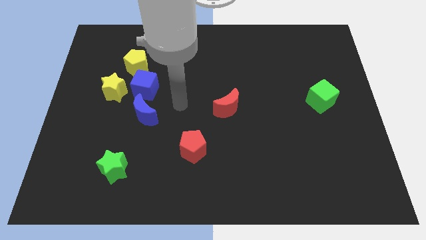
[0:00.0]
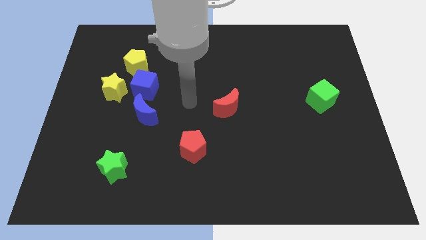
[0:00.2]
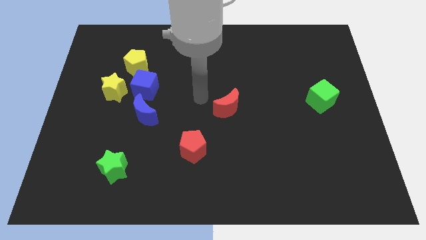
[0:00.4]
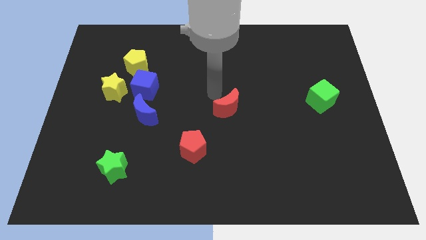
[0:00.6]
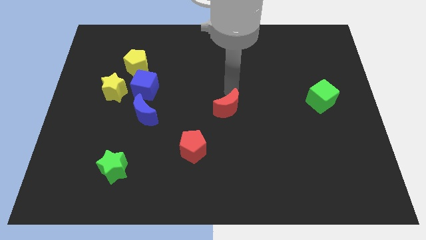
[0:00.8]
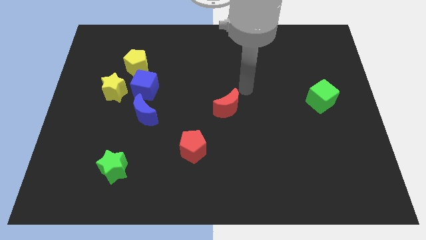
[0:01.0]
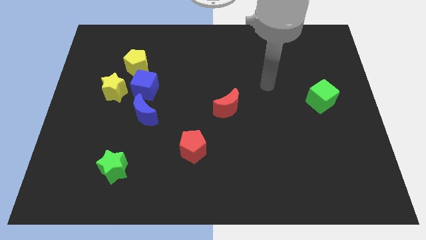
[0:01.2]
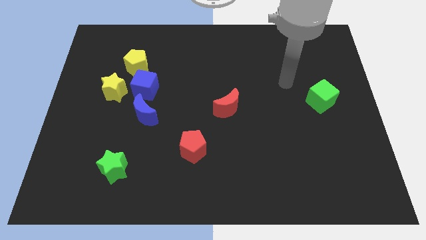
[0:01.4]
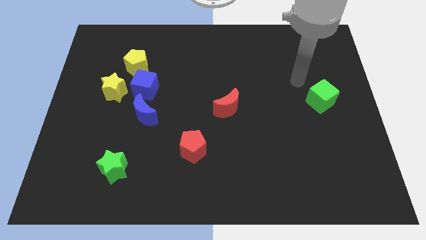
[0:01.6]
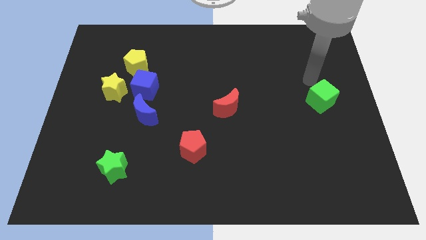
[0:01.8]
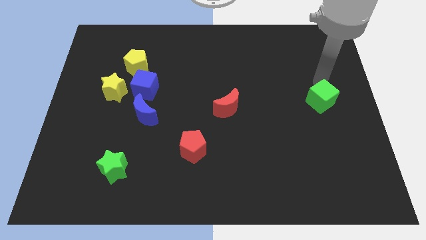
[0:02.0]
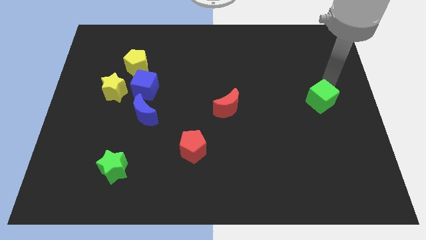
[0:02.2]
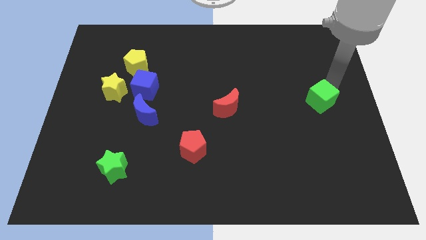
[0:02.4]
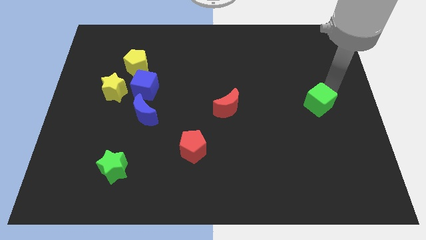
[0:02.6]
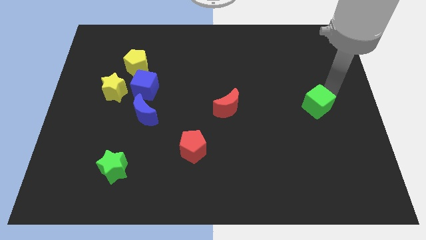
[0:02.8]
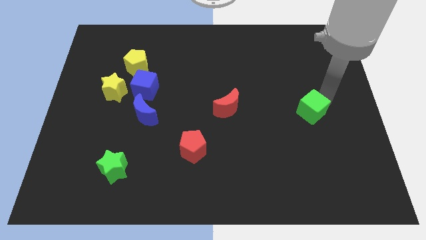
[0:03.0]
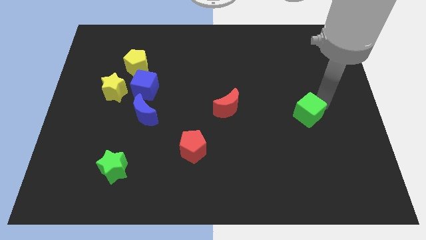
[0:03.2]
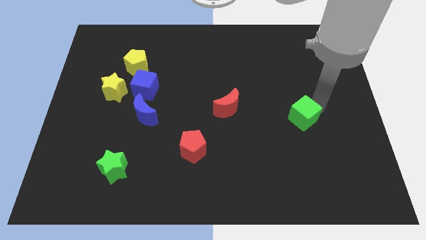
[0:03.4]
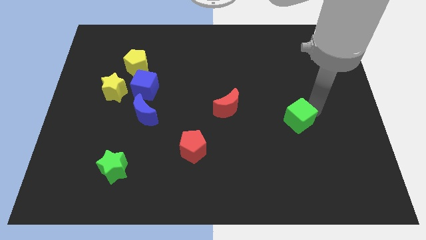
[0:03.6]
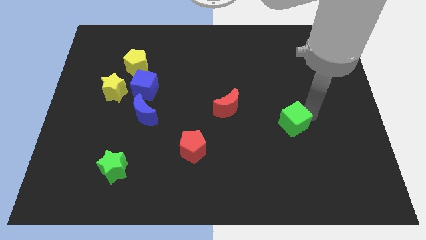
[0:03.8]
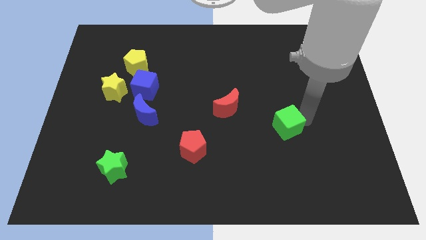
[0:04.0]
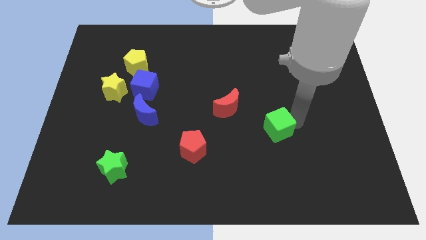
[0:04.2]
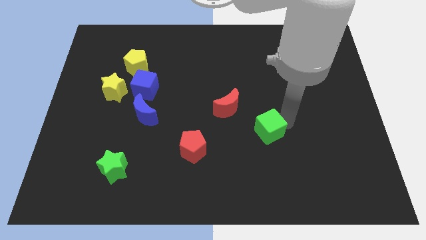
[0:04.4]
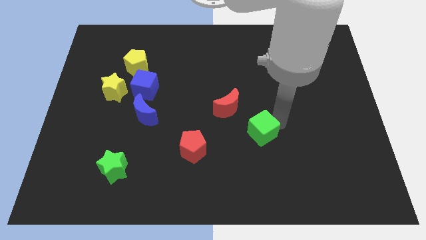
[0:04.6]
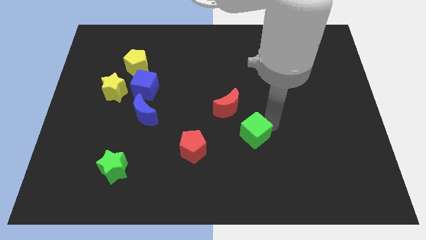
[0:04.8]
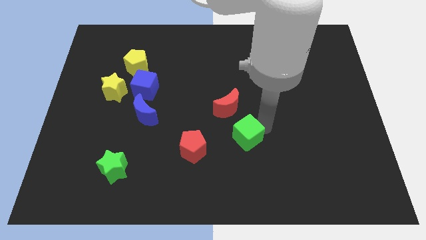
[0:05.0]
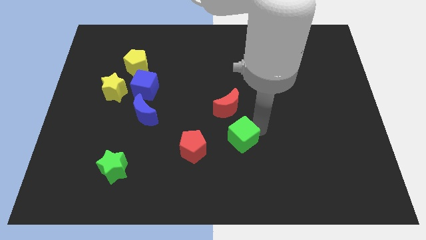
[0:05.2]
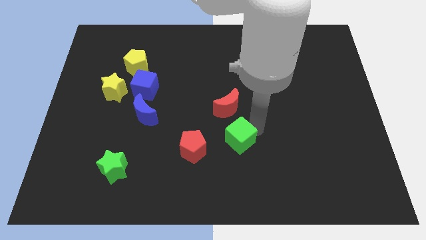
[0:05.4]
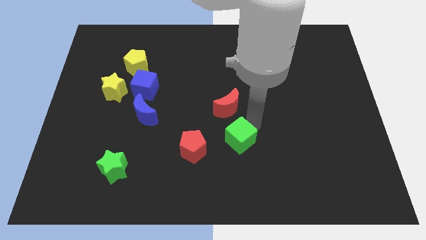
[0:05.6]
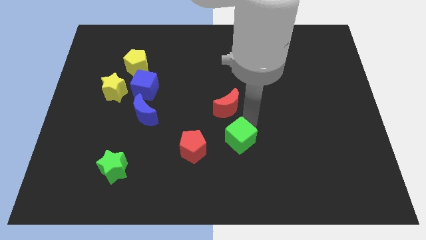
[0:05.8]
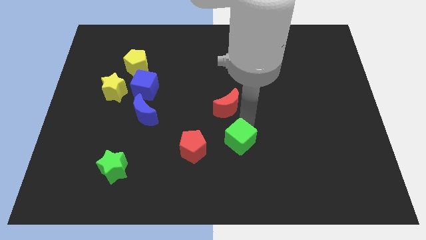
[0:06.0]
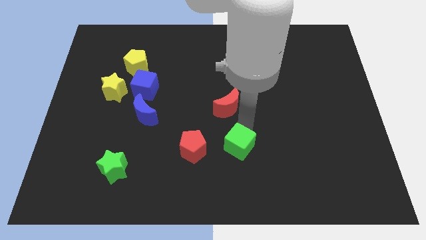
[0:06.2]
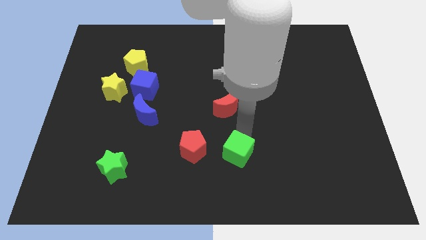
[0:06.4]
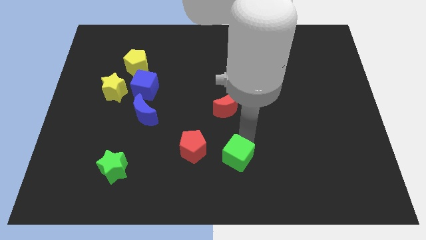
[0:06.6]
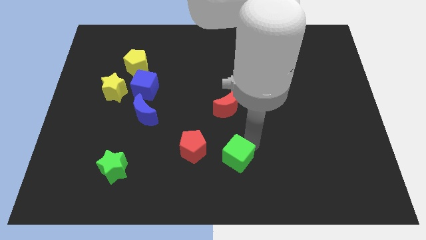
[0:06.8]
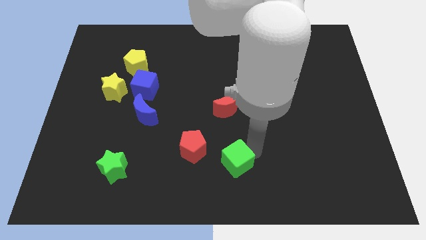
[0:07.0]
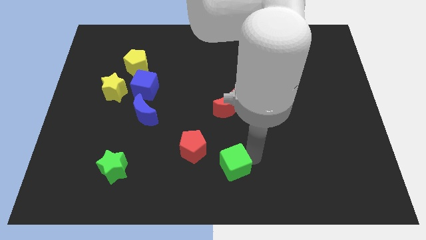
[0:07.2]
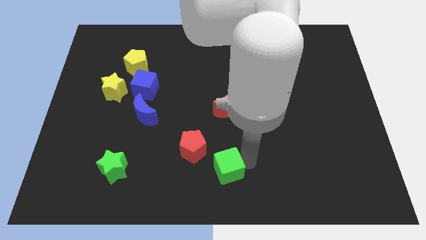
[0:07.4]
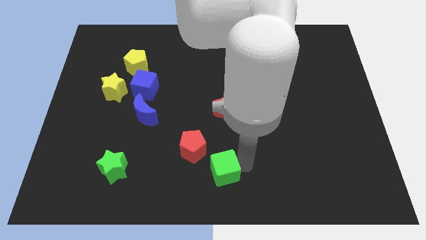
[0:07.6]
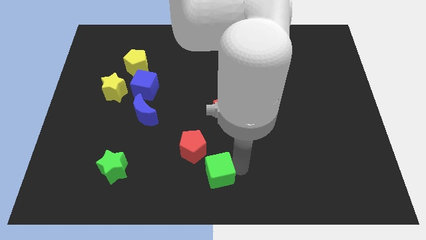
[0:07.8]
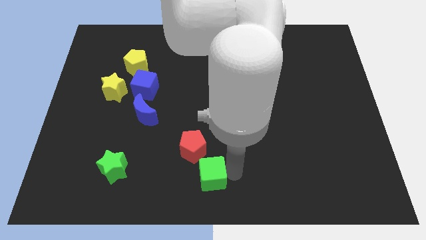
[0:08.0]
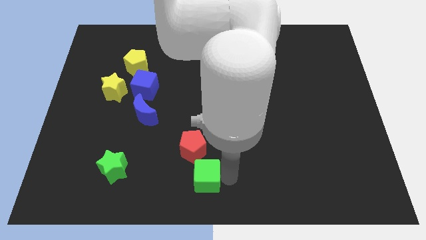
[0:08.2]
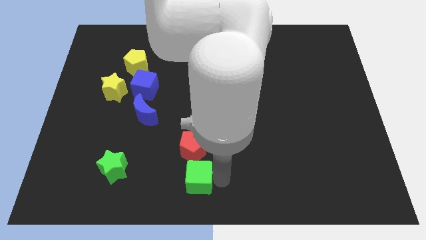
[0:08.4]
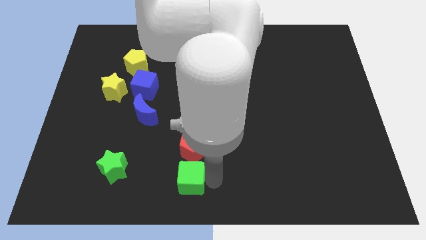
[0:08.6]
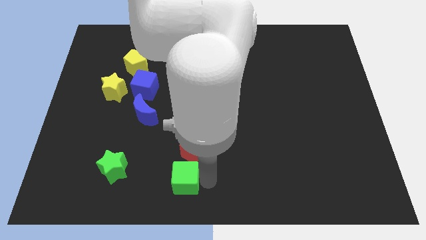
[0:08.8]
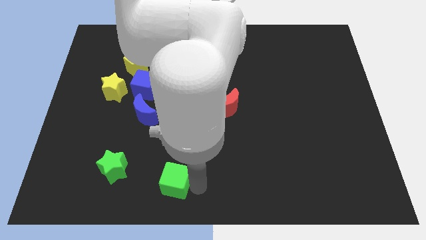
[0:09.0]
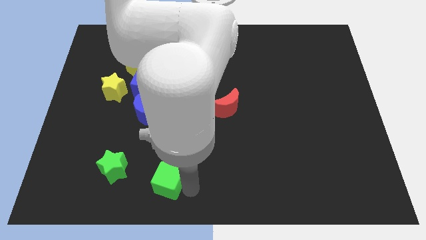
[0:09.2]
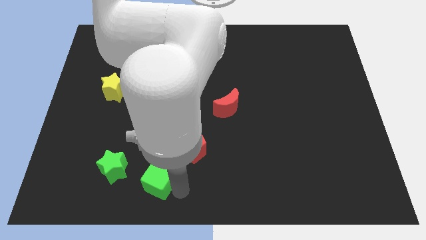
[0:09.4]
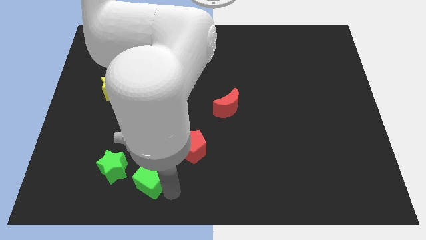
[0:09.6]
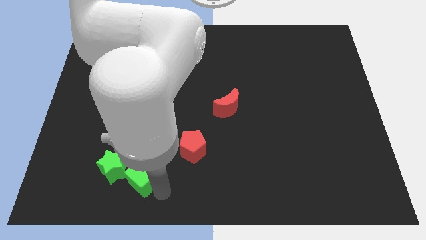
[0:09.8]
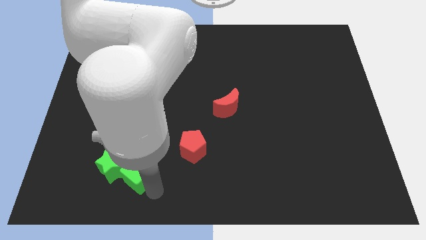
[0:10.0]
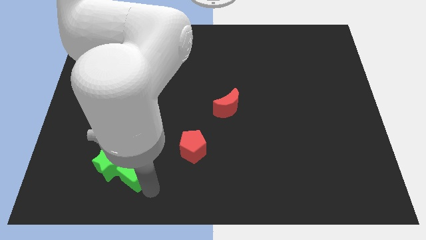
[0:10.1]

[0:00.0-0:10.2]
move the green cube towards the green star

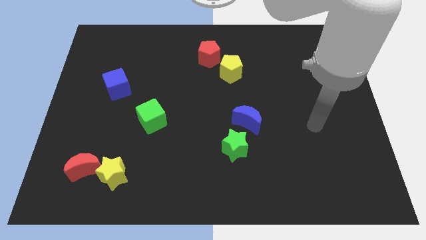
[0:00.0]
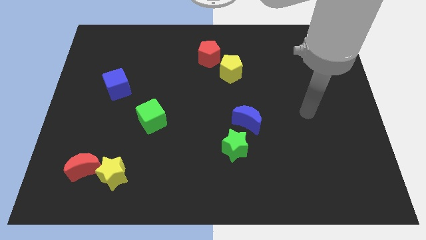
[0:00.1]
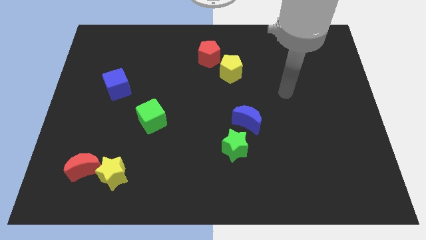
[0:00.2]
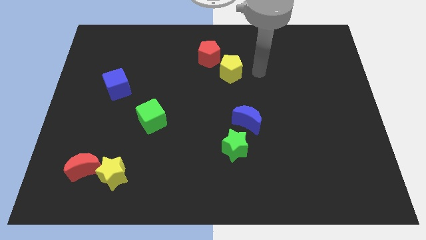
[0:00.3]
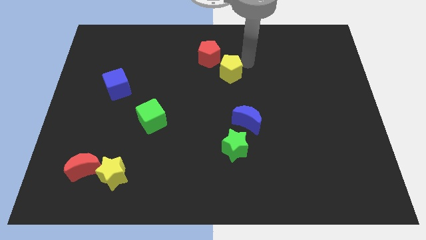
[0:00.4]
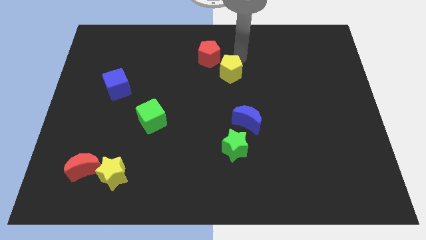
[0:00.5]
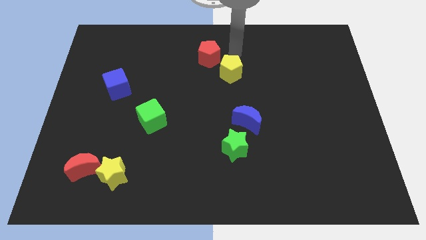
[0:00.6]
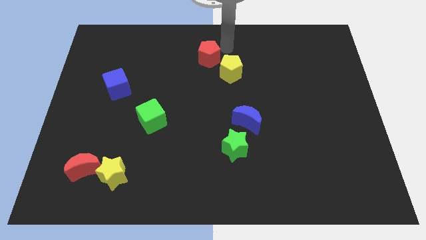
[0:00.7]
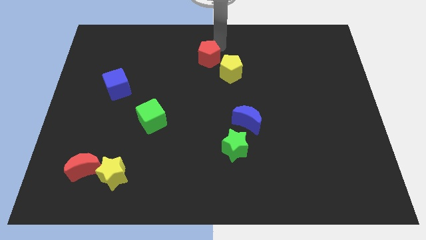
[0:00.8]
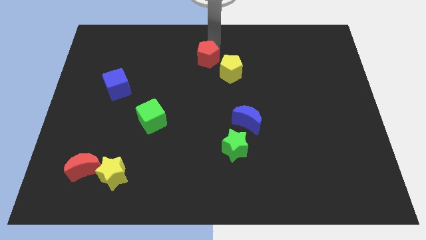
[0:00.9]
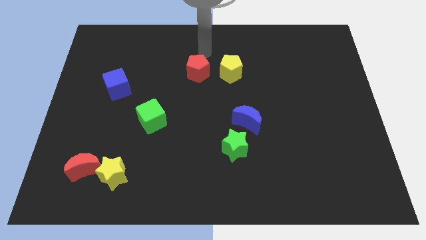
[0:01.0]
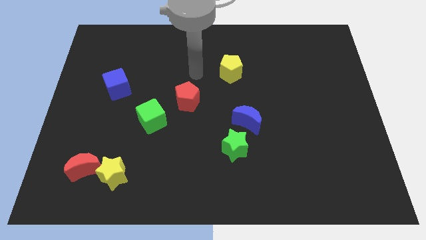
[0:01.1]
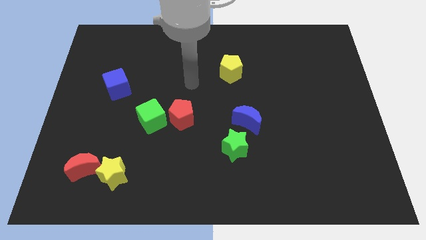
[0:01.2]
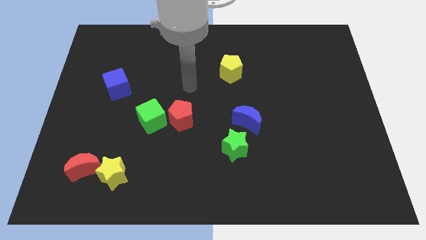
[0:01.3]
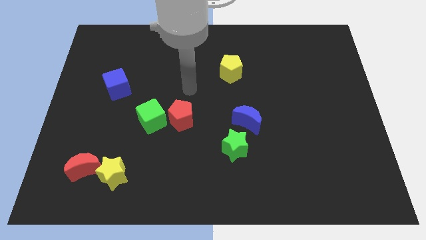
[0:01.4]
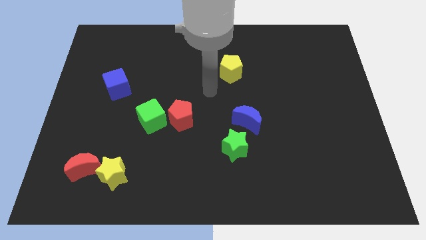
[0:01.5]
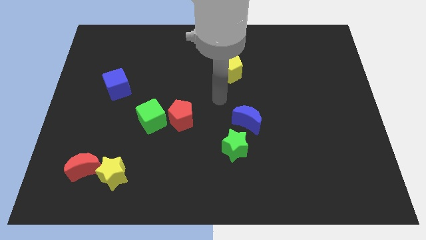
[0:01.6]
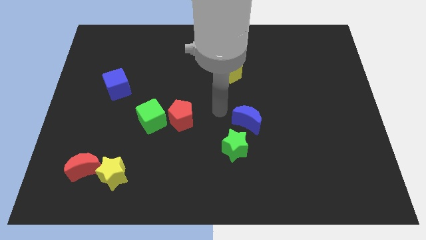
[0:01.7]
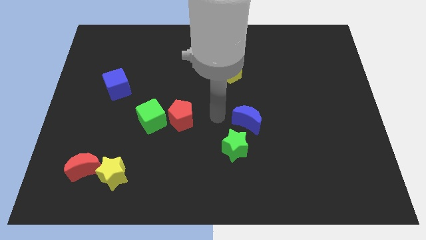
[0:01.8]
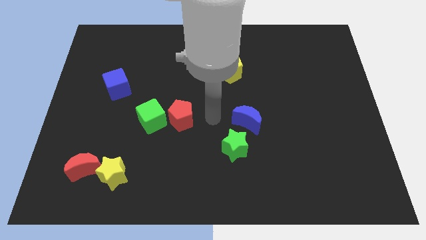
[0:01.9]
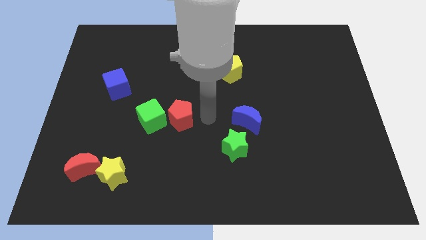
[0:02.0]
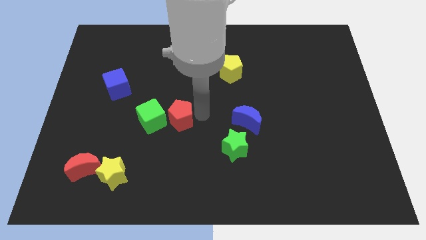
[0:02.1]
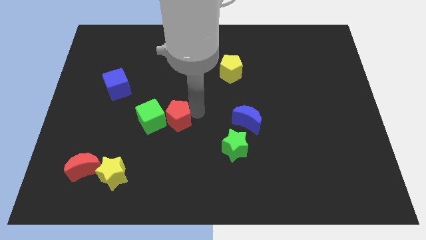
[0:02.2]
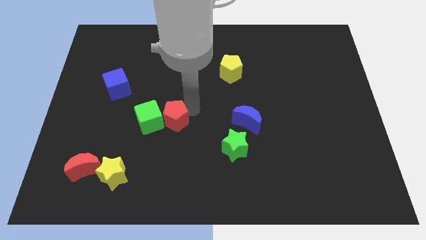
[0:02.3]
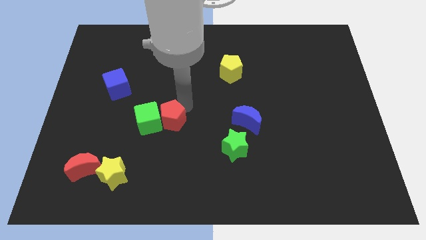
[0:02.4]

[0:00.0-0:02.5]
push the red pentagon to the green cube

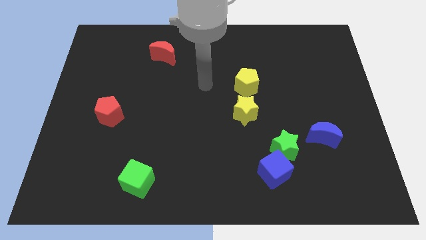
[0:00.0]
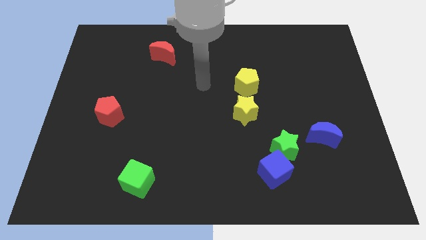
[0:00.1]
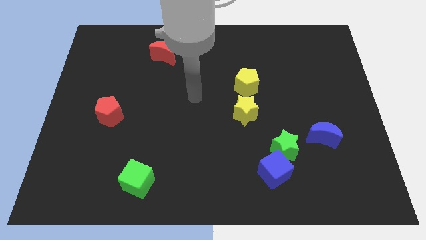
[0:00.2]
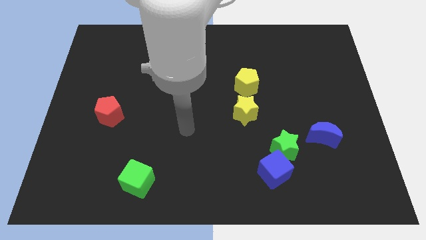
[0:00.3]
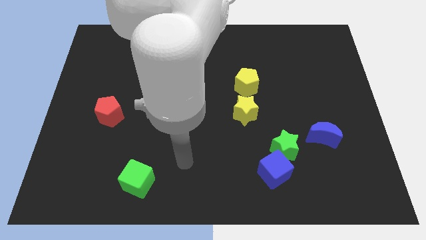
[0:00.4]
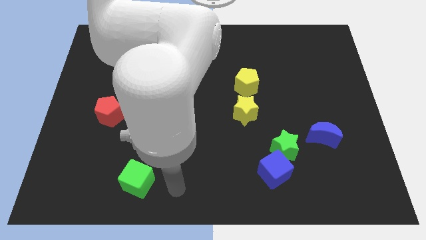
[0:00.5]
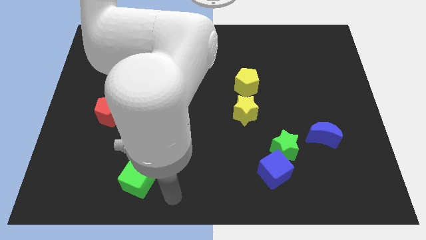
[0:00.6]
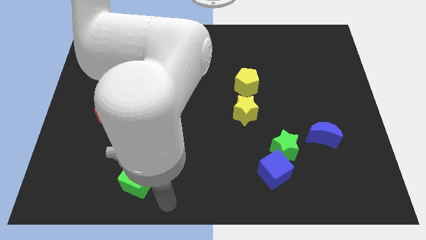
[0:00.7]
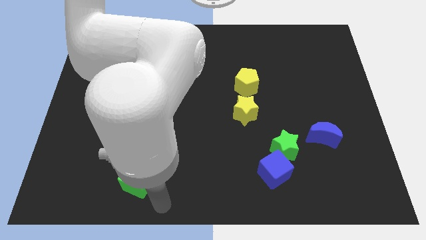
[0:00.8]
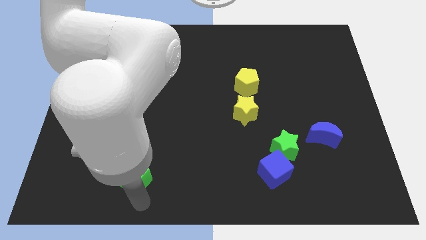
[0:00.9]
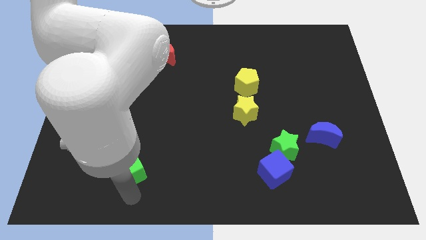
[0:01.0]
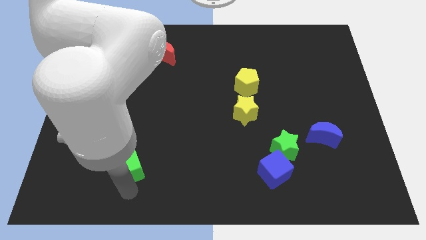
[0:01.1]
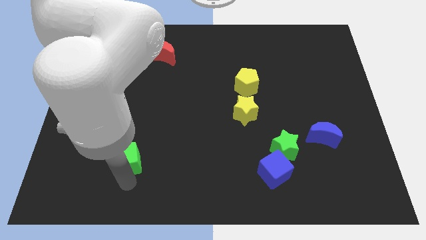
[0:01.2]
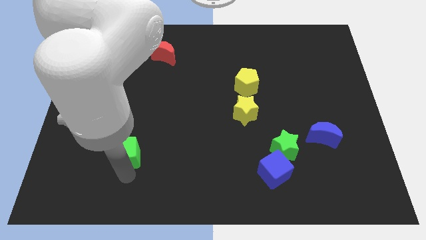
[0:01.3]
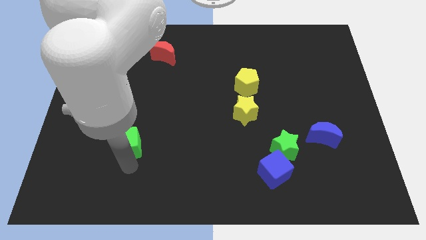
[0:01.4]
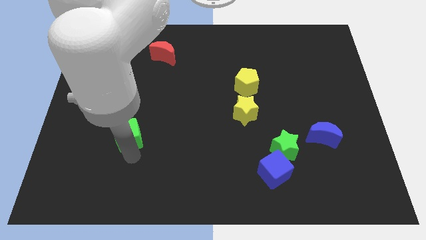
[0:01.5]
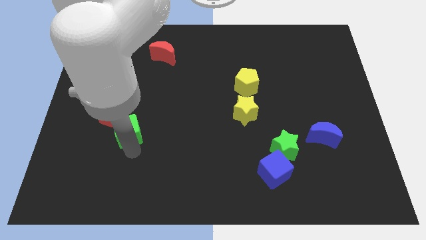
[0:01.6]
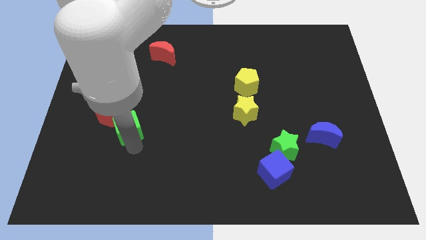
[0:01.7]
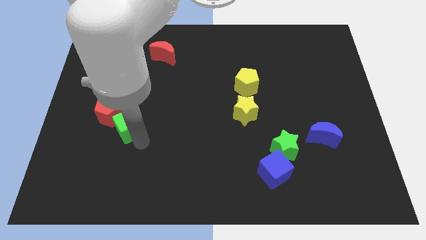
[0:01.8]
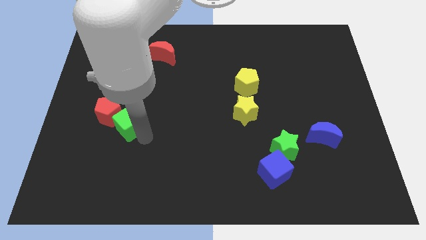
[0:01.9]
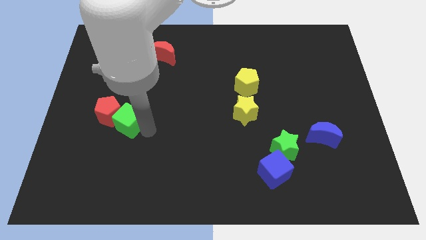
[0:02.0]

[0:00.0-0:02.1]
push the green cube to the red pentagon
